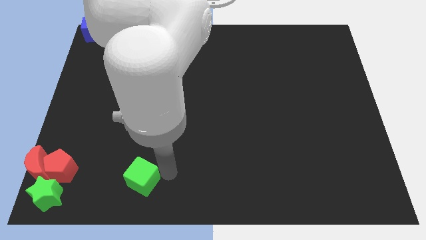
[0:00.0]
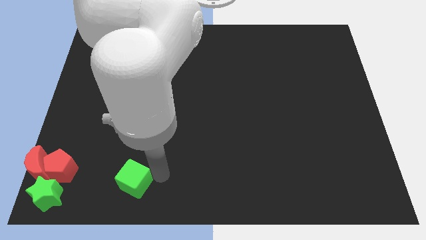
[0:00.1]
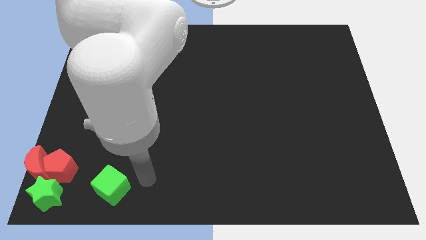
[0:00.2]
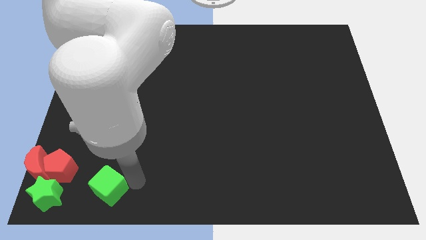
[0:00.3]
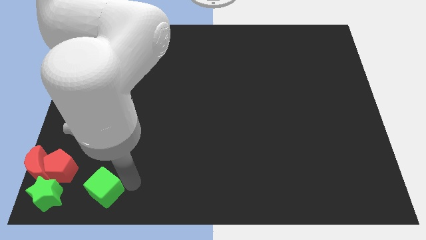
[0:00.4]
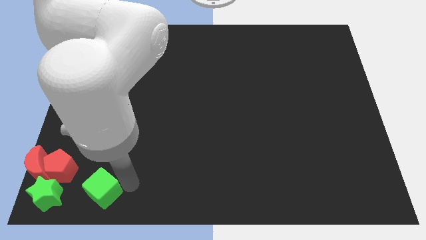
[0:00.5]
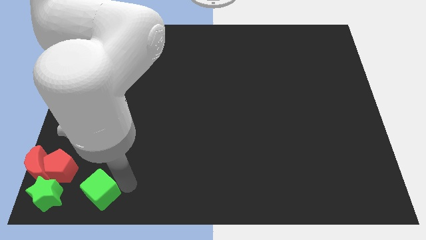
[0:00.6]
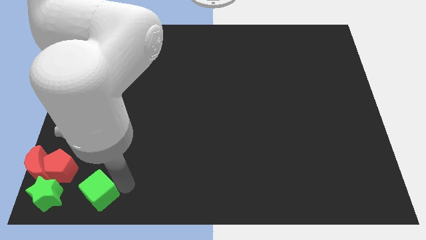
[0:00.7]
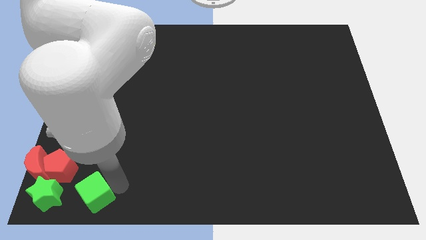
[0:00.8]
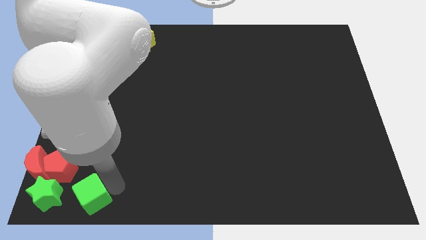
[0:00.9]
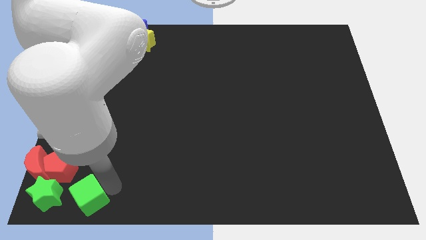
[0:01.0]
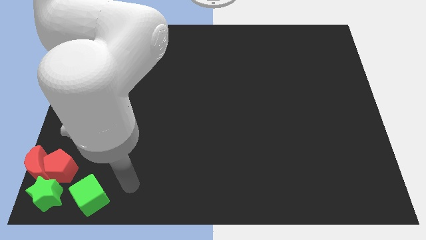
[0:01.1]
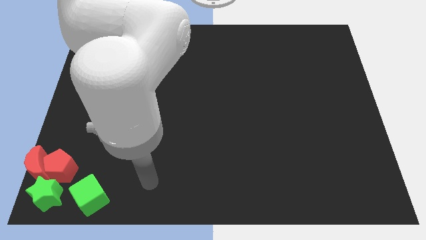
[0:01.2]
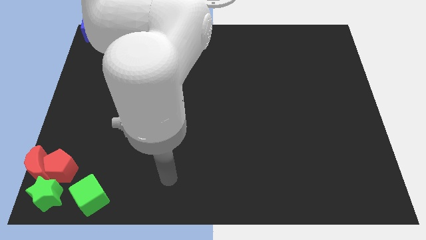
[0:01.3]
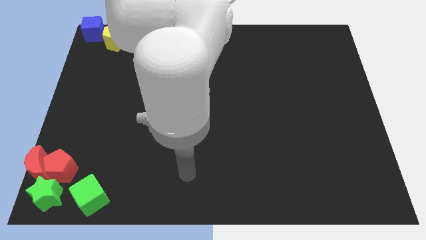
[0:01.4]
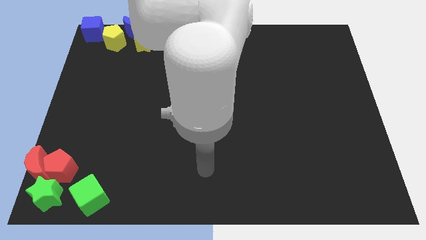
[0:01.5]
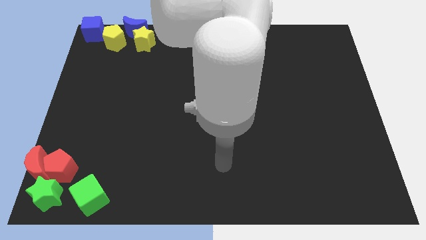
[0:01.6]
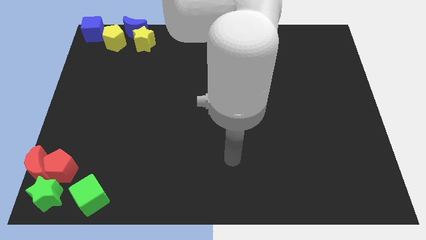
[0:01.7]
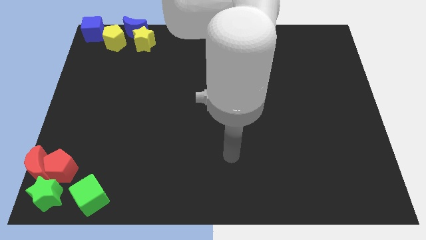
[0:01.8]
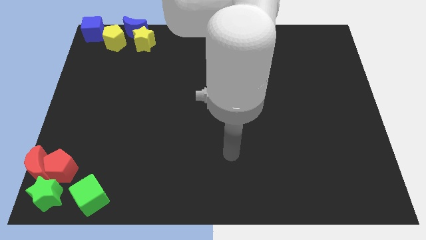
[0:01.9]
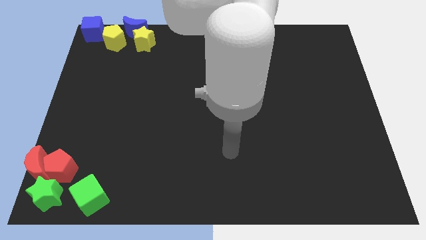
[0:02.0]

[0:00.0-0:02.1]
move green cube close to the green star

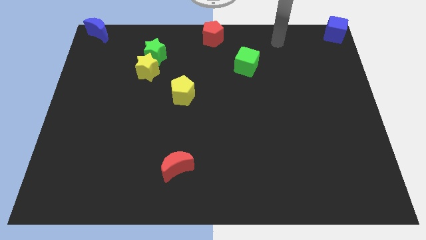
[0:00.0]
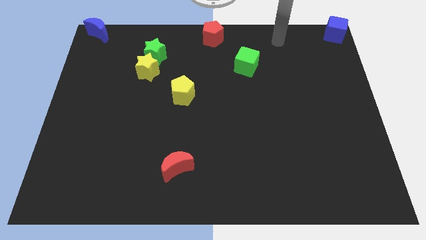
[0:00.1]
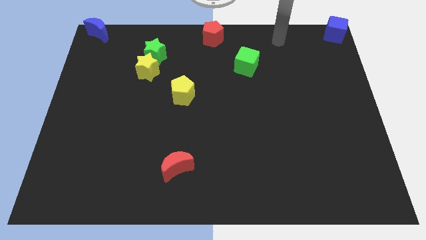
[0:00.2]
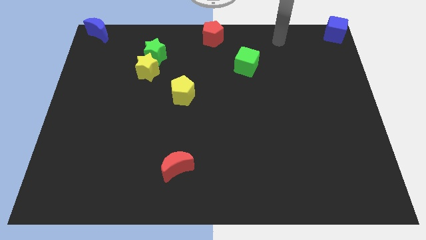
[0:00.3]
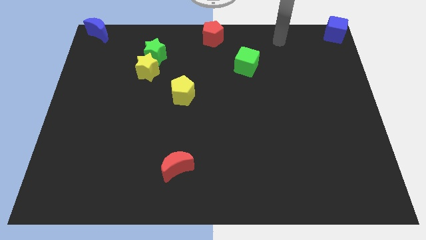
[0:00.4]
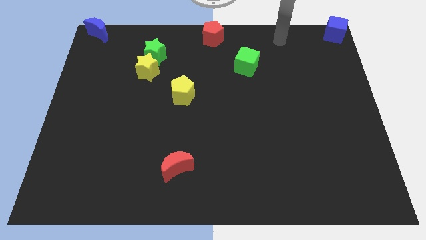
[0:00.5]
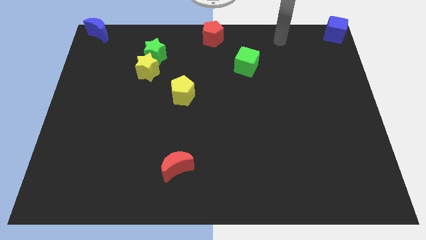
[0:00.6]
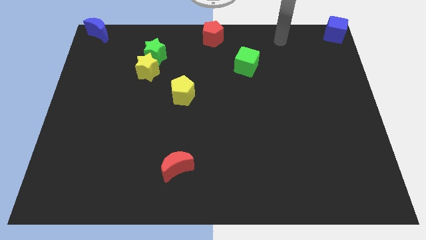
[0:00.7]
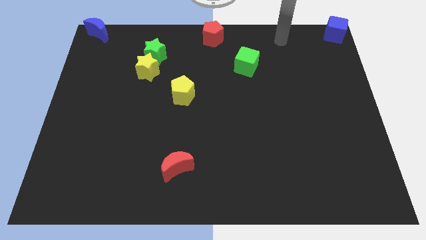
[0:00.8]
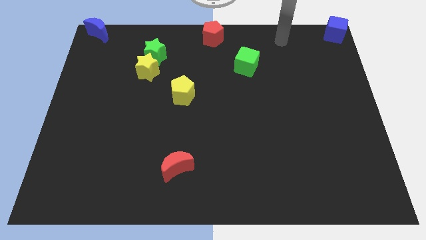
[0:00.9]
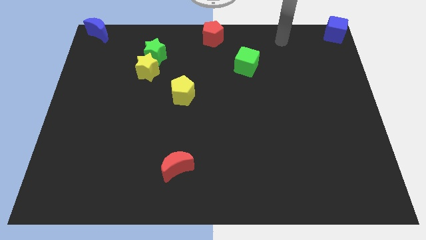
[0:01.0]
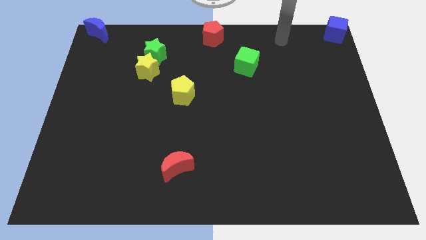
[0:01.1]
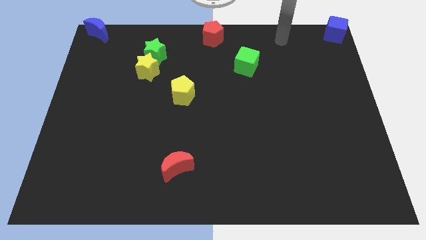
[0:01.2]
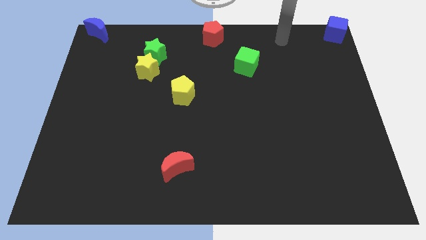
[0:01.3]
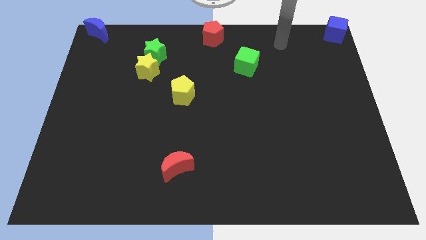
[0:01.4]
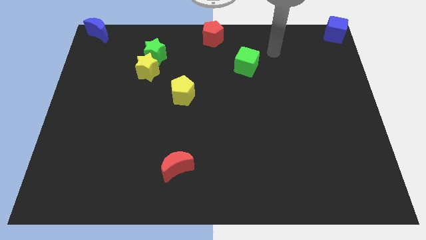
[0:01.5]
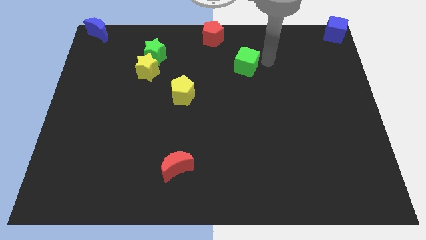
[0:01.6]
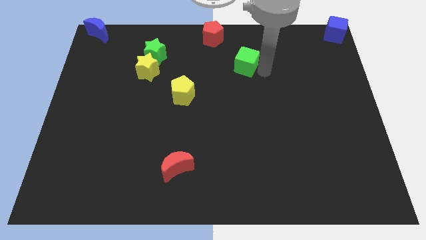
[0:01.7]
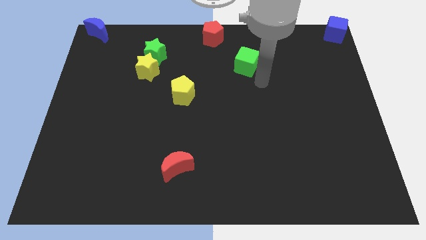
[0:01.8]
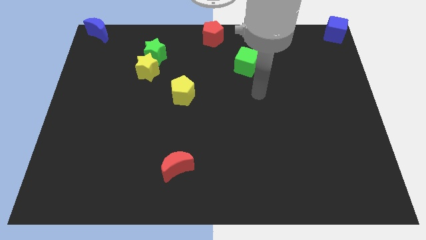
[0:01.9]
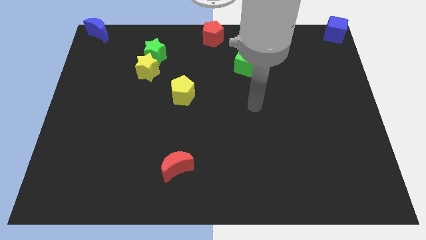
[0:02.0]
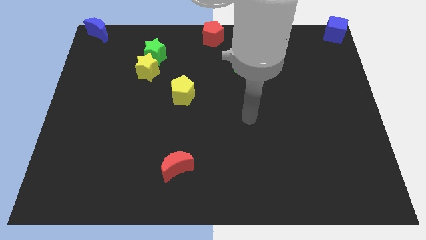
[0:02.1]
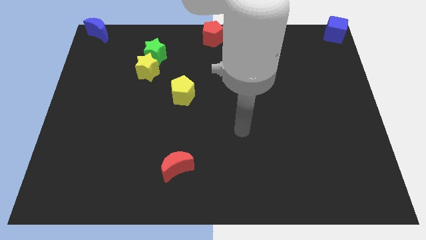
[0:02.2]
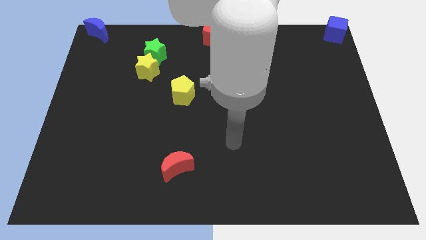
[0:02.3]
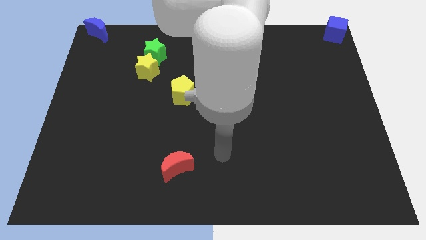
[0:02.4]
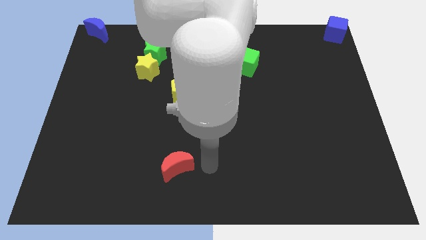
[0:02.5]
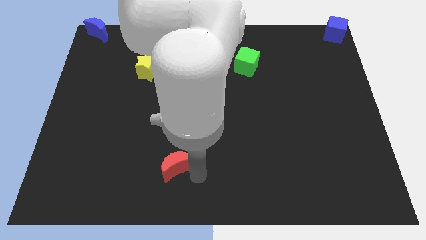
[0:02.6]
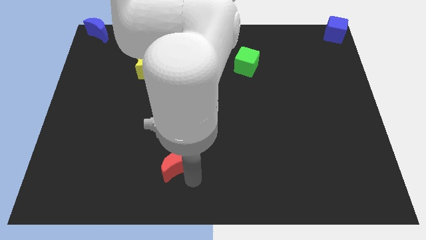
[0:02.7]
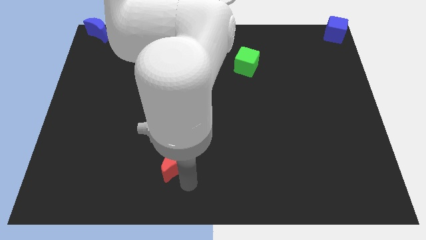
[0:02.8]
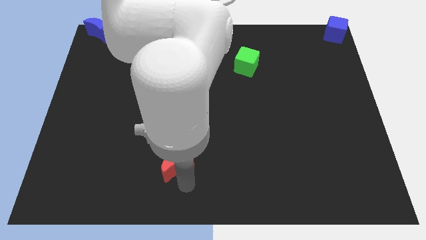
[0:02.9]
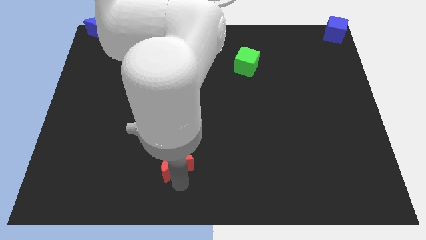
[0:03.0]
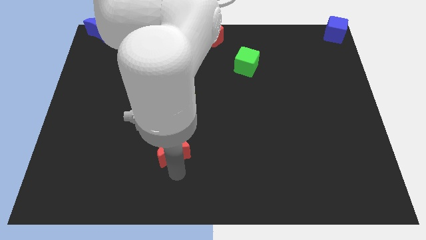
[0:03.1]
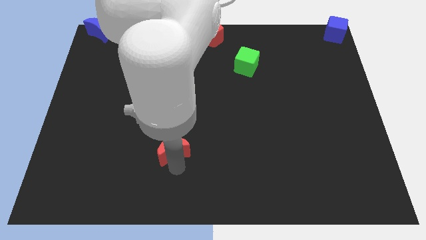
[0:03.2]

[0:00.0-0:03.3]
move the arm to the bottom of red moon

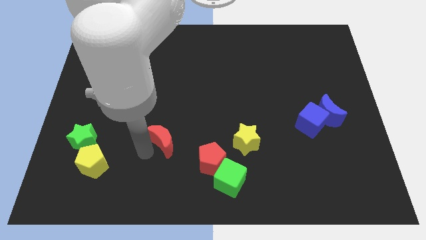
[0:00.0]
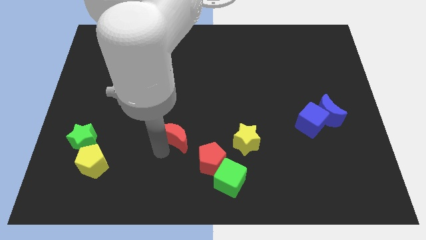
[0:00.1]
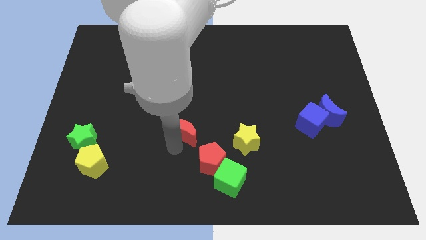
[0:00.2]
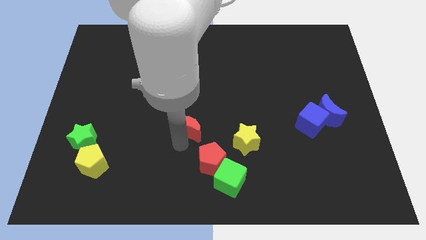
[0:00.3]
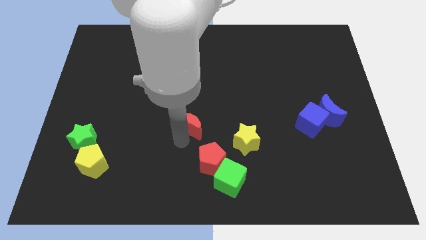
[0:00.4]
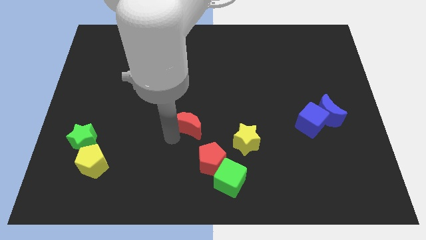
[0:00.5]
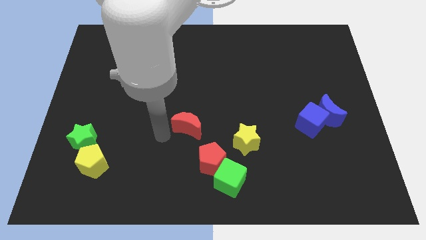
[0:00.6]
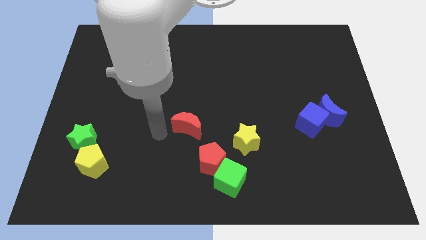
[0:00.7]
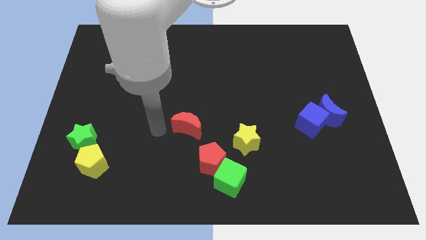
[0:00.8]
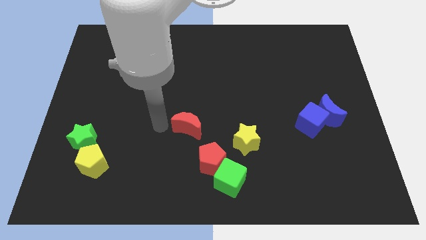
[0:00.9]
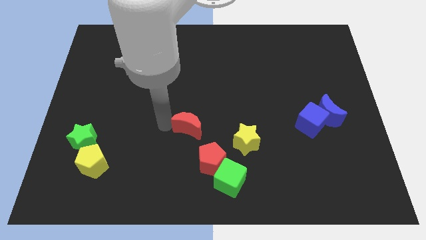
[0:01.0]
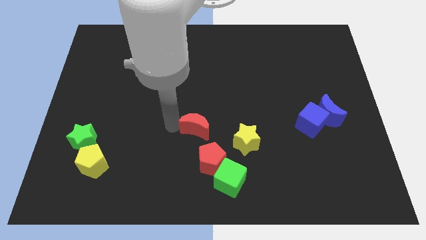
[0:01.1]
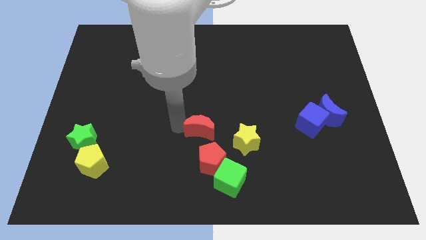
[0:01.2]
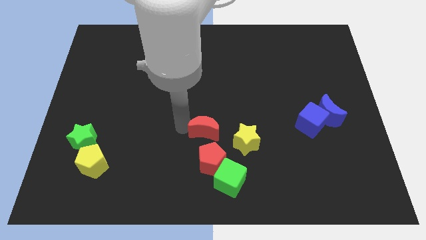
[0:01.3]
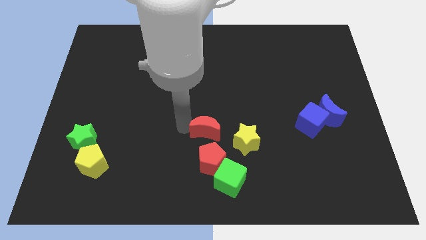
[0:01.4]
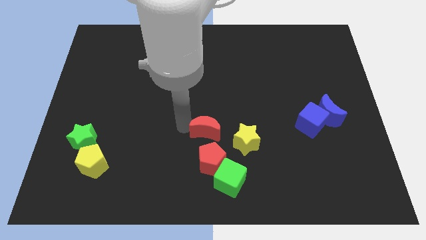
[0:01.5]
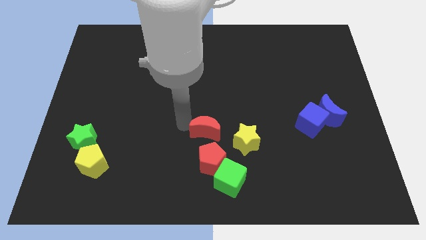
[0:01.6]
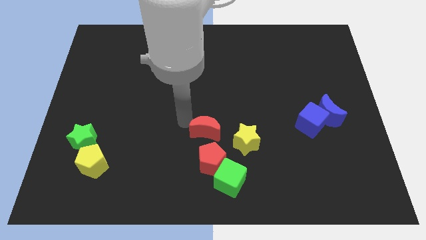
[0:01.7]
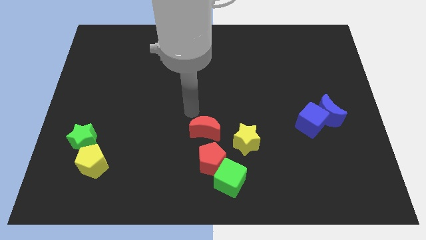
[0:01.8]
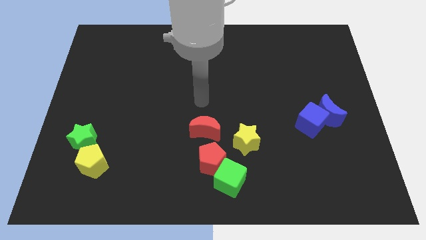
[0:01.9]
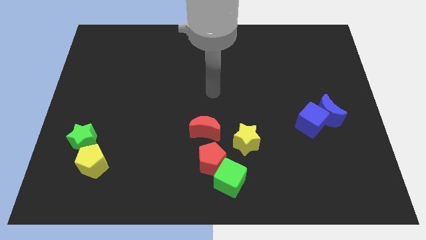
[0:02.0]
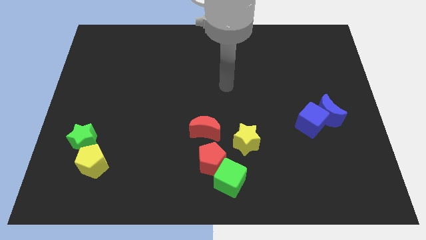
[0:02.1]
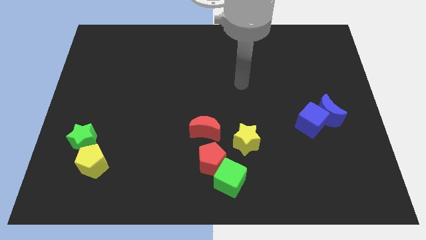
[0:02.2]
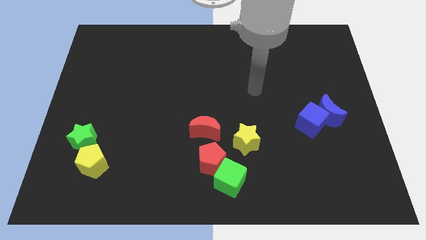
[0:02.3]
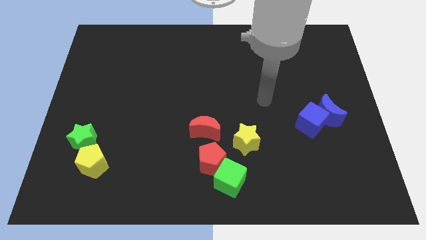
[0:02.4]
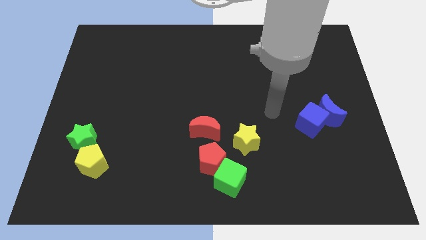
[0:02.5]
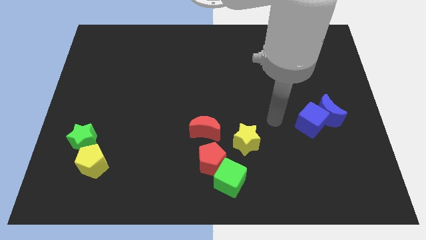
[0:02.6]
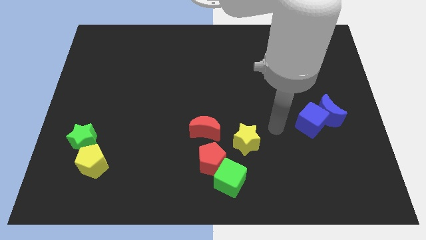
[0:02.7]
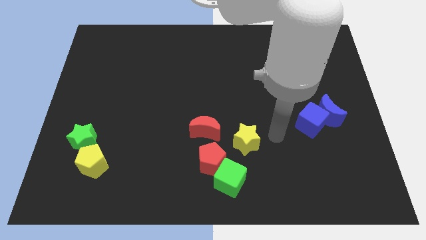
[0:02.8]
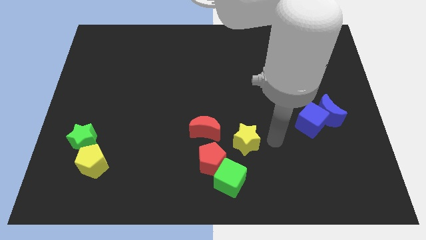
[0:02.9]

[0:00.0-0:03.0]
place the red crescent above the red pentagon

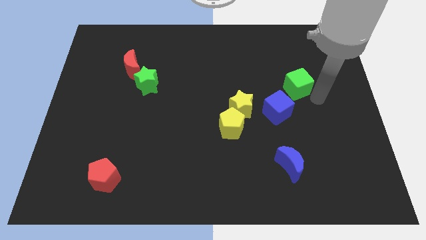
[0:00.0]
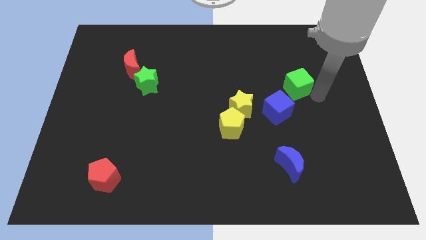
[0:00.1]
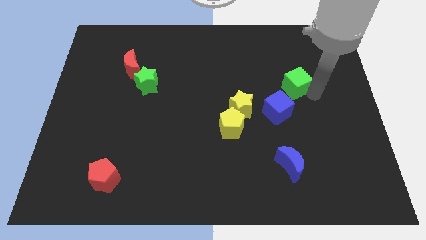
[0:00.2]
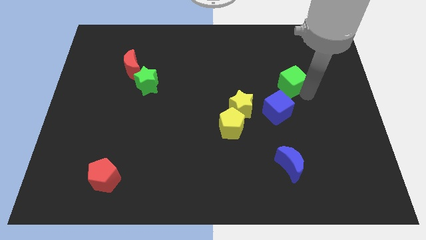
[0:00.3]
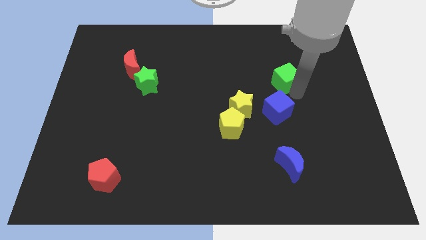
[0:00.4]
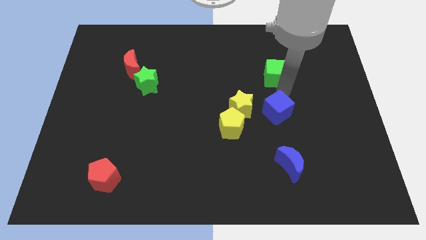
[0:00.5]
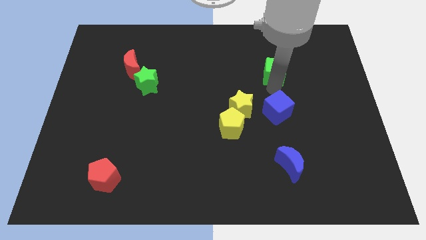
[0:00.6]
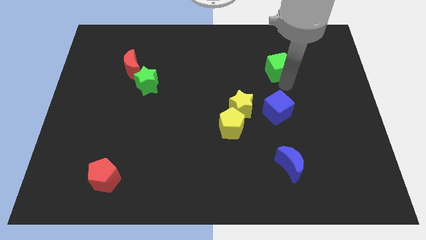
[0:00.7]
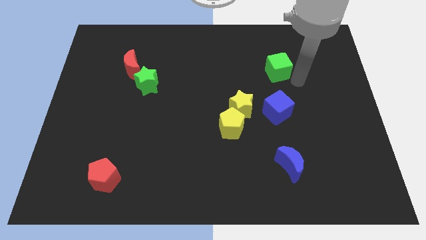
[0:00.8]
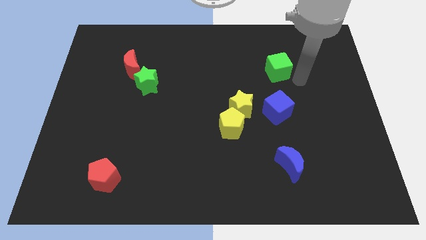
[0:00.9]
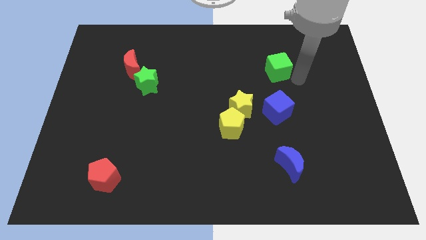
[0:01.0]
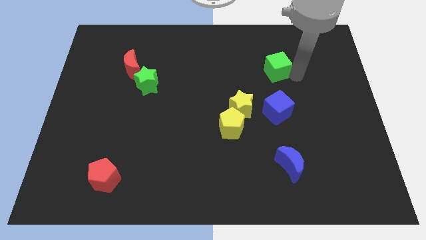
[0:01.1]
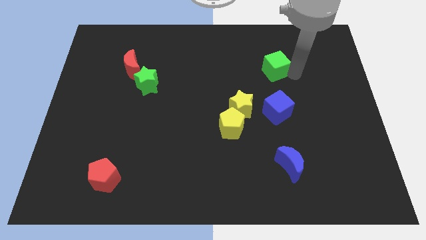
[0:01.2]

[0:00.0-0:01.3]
move the green cube above the blue cube
